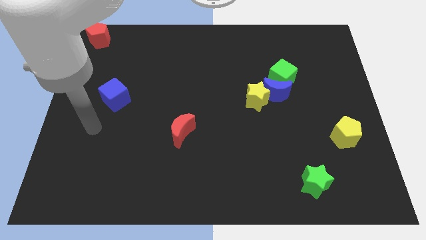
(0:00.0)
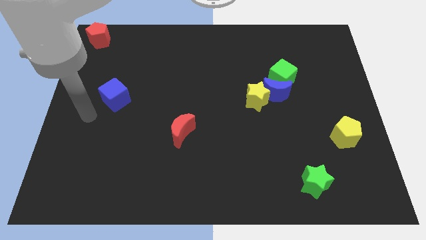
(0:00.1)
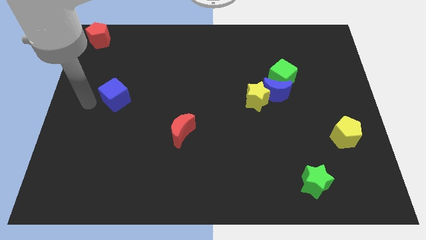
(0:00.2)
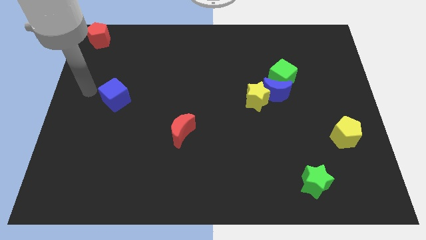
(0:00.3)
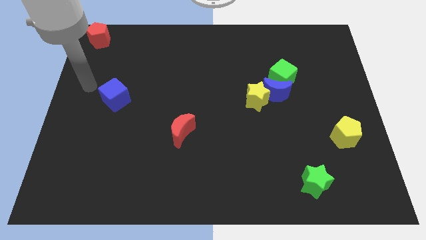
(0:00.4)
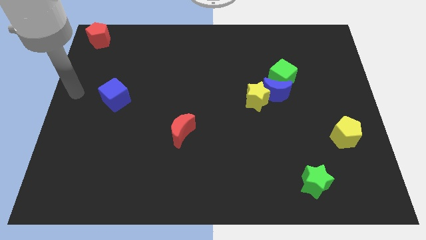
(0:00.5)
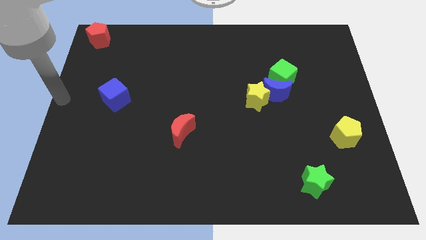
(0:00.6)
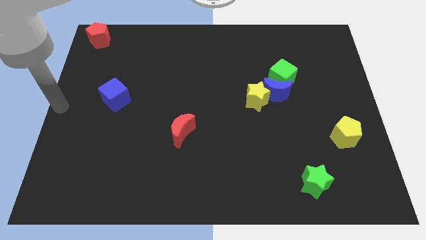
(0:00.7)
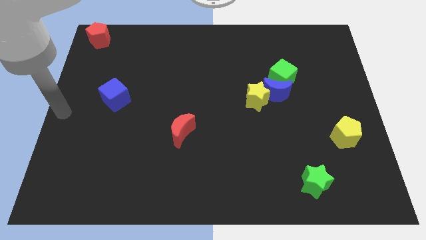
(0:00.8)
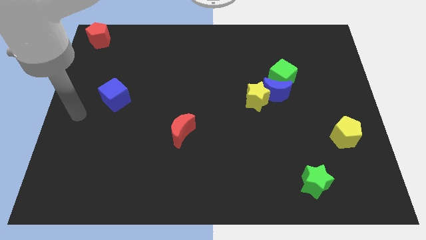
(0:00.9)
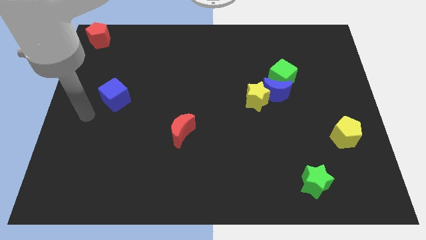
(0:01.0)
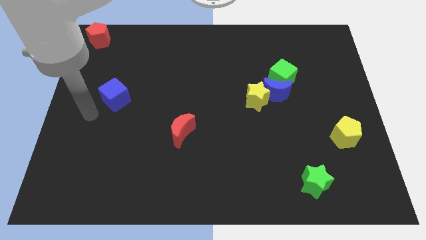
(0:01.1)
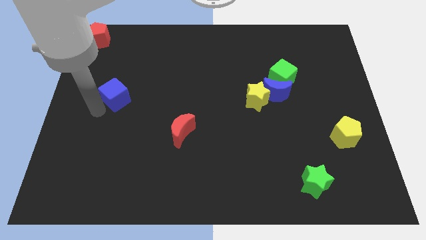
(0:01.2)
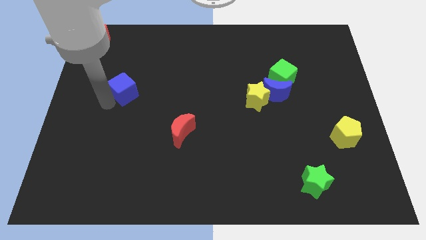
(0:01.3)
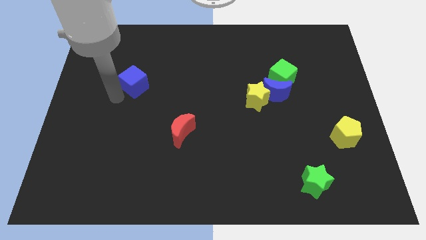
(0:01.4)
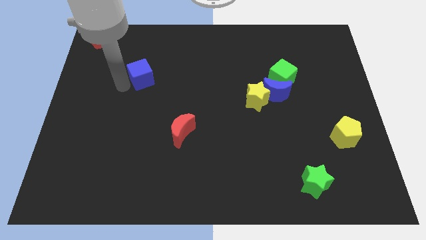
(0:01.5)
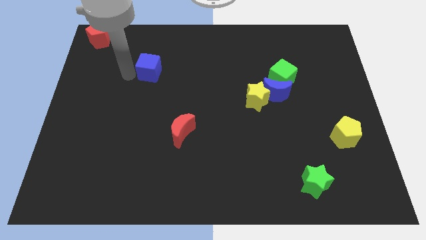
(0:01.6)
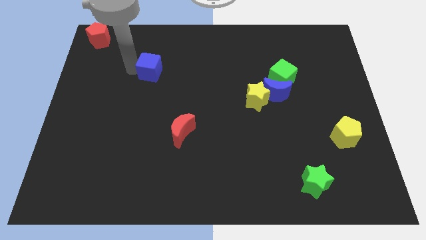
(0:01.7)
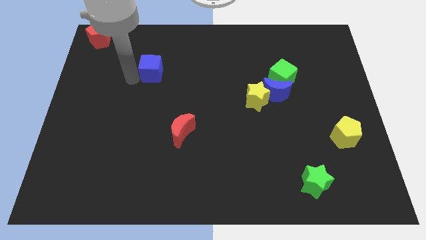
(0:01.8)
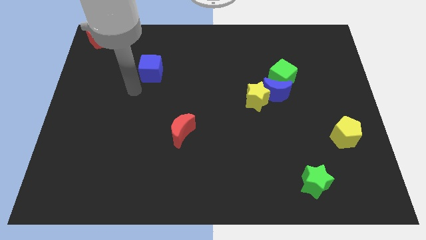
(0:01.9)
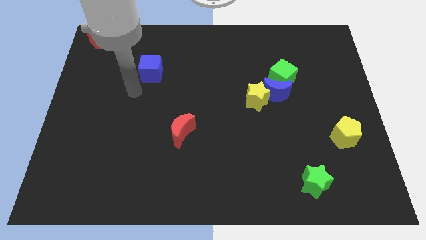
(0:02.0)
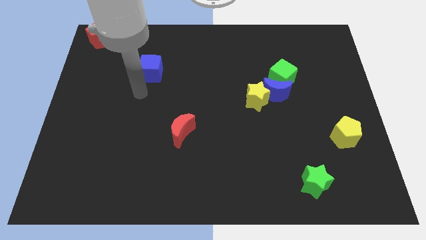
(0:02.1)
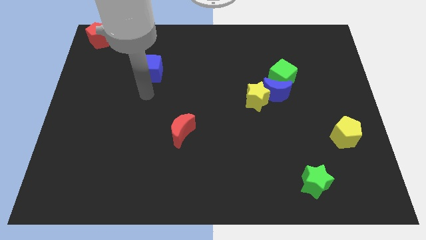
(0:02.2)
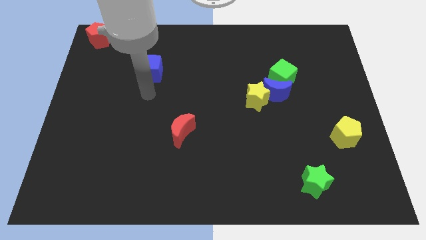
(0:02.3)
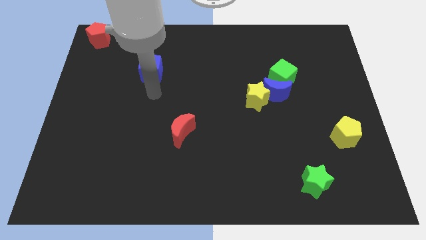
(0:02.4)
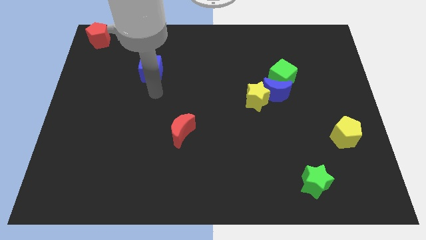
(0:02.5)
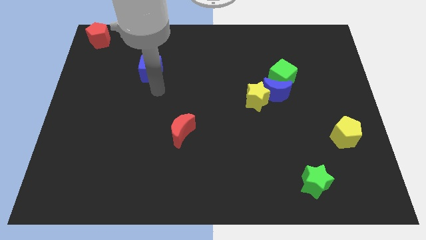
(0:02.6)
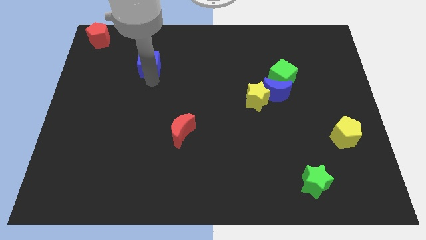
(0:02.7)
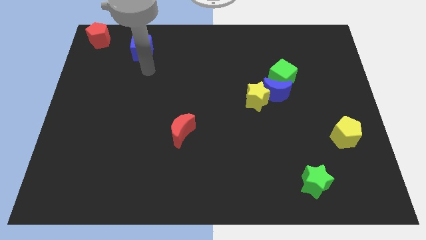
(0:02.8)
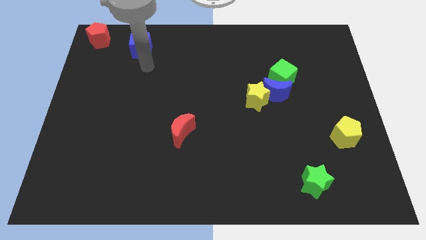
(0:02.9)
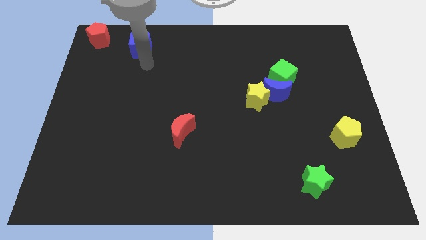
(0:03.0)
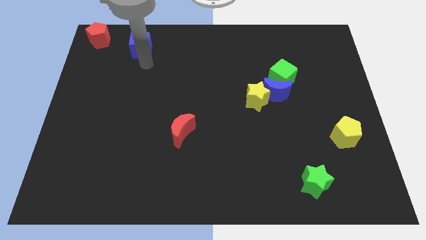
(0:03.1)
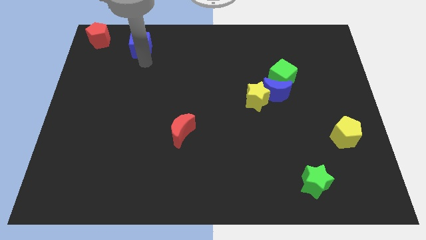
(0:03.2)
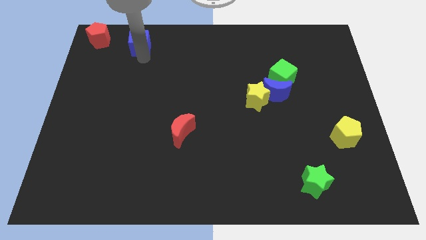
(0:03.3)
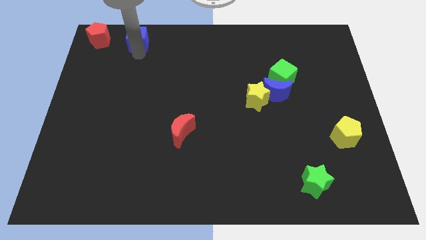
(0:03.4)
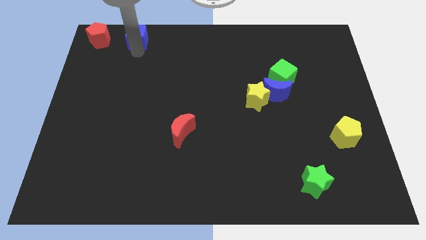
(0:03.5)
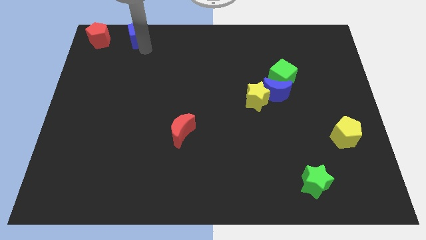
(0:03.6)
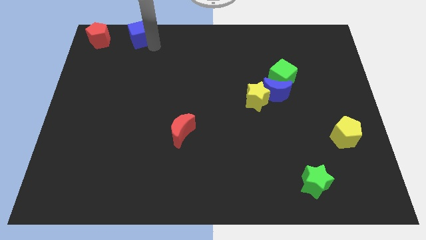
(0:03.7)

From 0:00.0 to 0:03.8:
push blue cube right to red pentagon

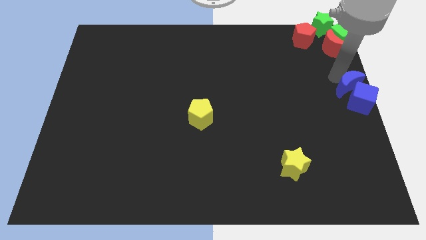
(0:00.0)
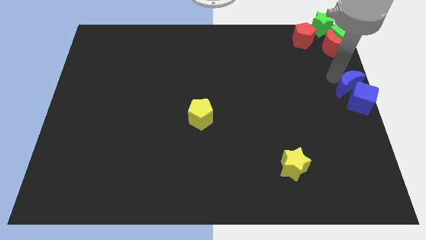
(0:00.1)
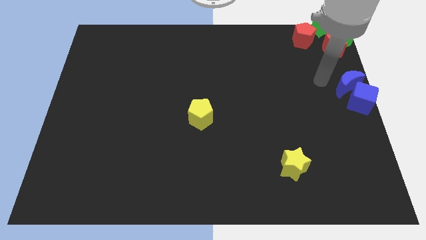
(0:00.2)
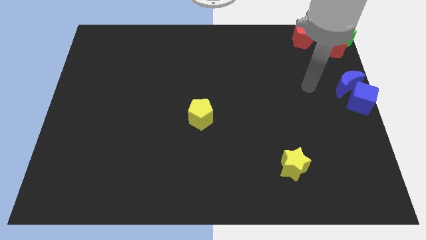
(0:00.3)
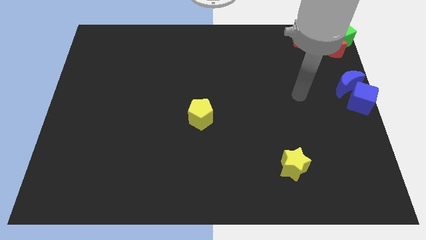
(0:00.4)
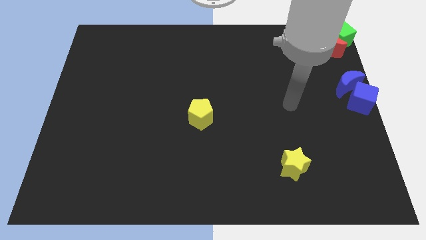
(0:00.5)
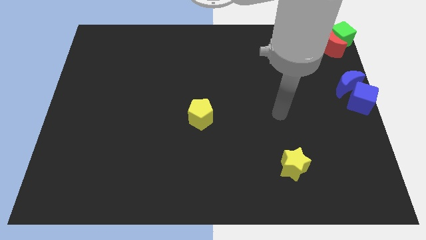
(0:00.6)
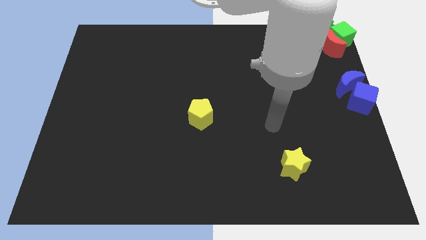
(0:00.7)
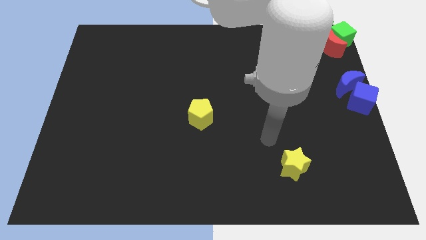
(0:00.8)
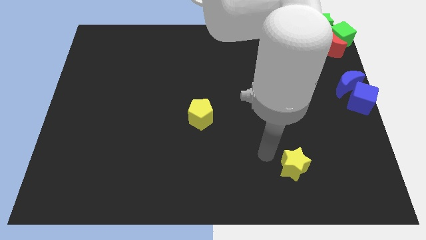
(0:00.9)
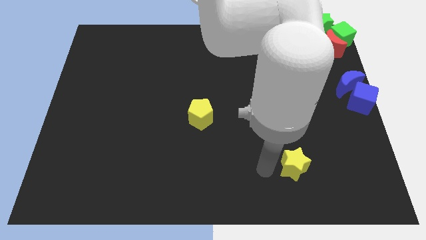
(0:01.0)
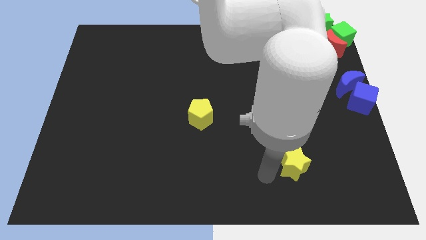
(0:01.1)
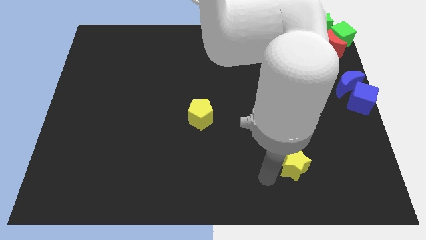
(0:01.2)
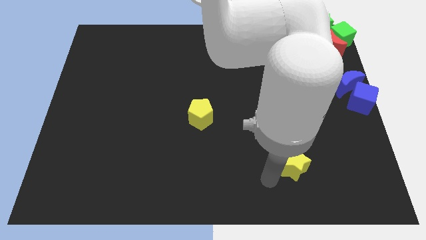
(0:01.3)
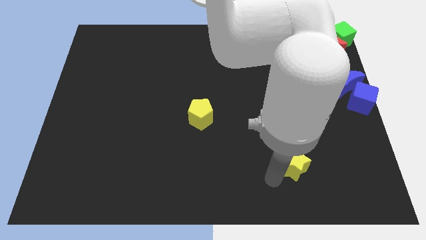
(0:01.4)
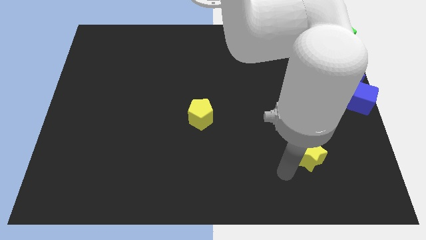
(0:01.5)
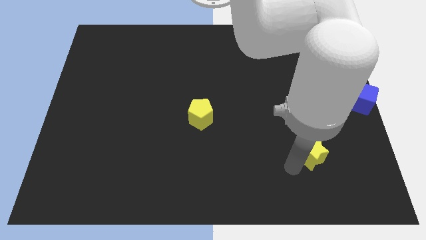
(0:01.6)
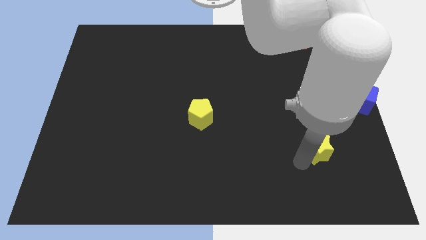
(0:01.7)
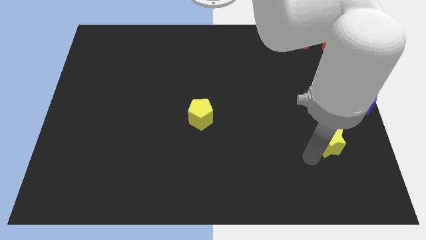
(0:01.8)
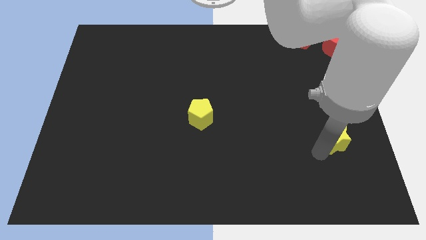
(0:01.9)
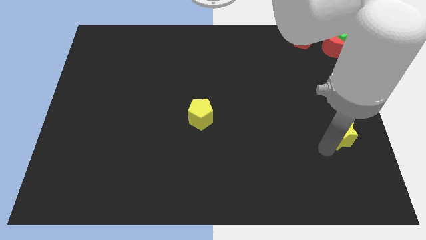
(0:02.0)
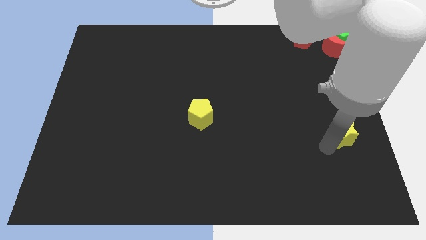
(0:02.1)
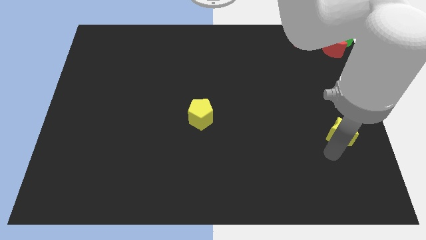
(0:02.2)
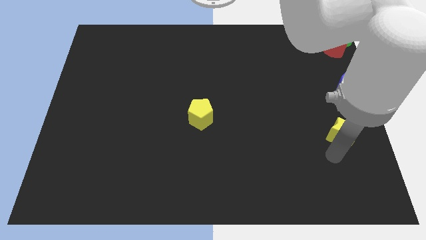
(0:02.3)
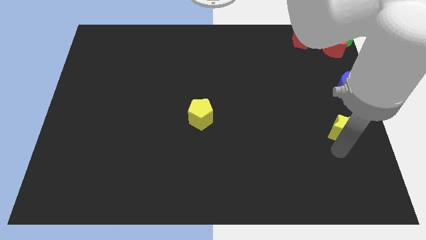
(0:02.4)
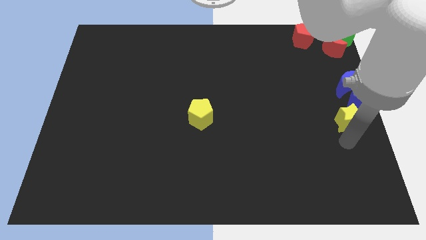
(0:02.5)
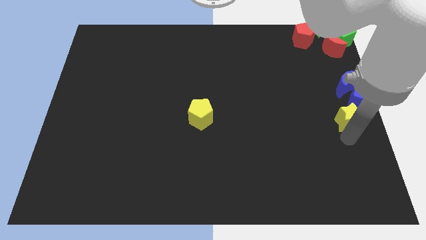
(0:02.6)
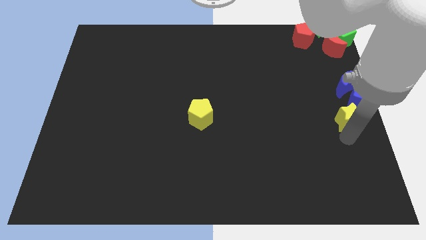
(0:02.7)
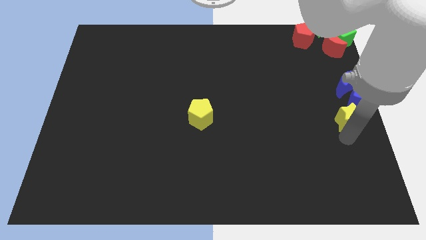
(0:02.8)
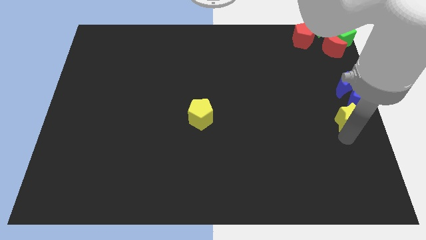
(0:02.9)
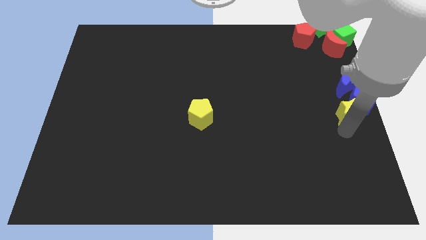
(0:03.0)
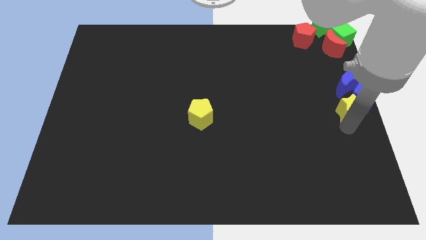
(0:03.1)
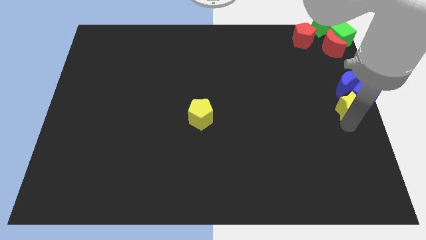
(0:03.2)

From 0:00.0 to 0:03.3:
move the yellow star into the bottom side of the blue cube

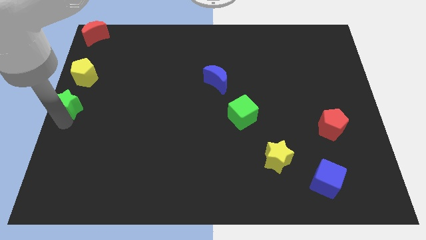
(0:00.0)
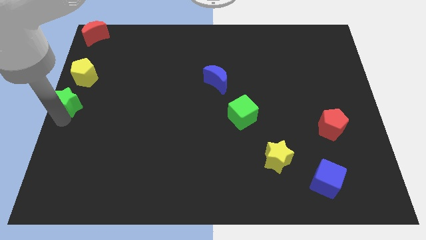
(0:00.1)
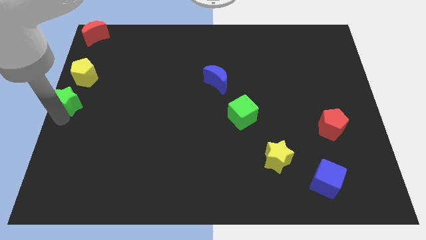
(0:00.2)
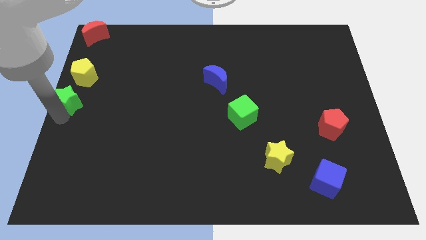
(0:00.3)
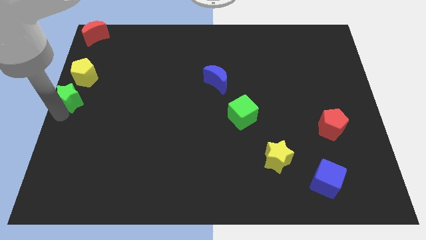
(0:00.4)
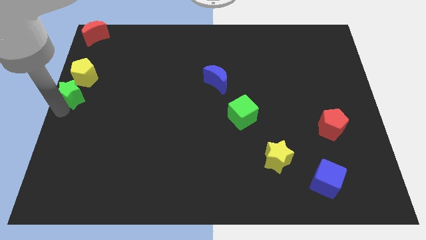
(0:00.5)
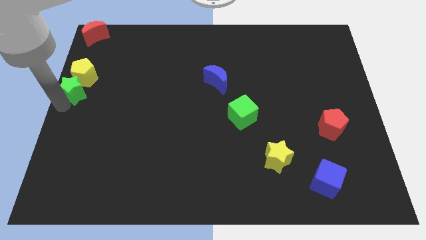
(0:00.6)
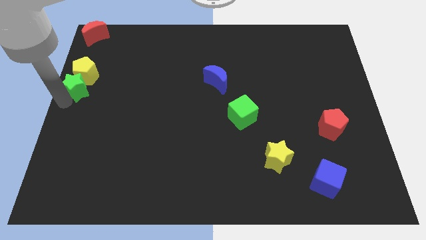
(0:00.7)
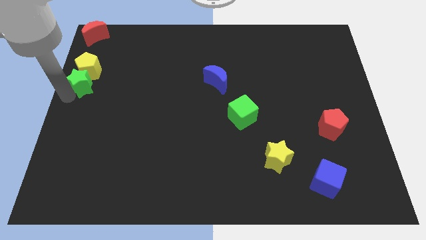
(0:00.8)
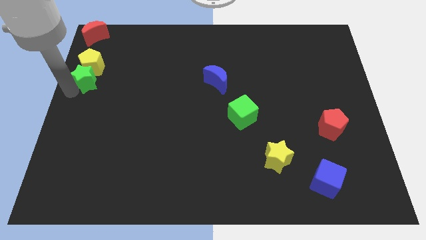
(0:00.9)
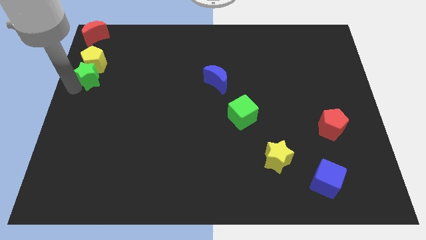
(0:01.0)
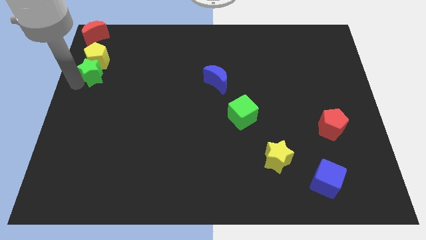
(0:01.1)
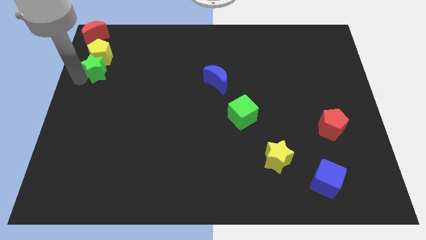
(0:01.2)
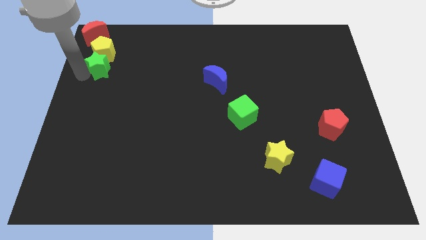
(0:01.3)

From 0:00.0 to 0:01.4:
push the green star into the yellow pentagon

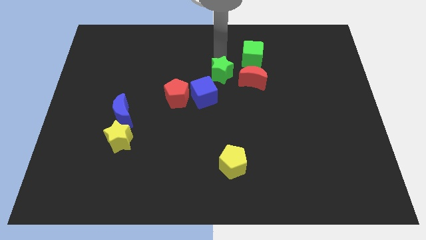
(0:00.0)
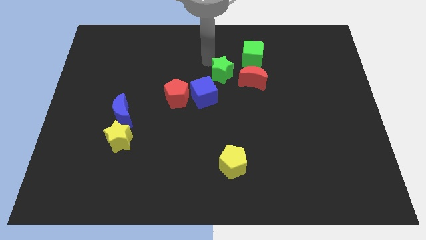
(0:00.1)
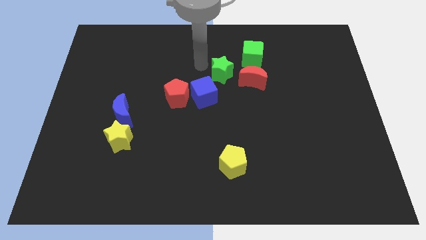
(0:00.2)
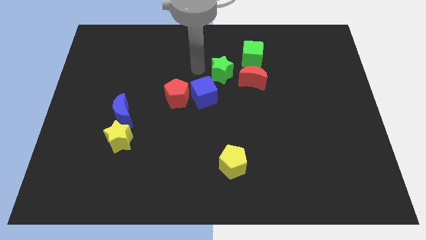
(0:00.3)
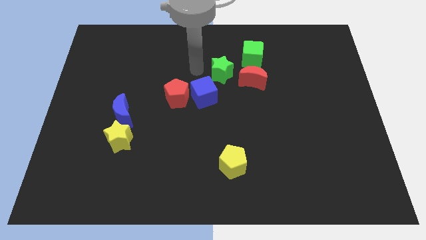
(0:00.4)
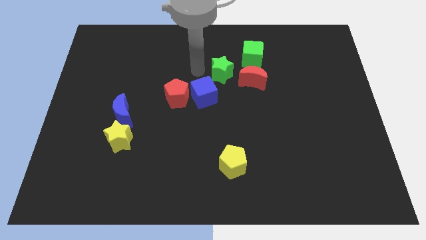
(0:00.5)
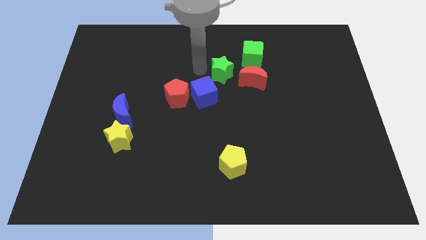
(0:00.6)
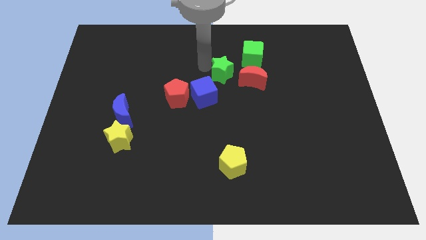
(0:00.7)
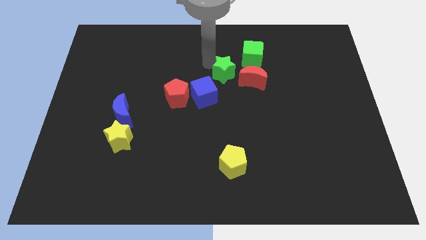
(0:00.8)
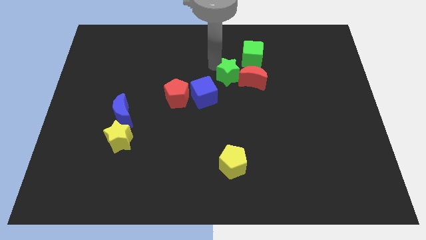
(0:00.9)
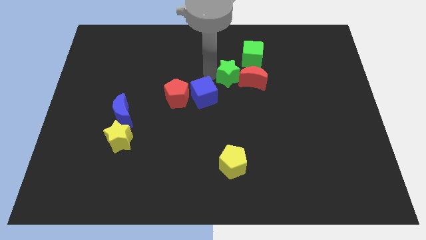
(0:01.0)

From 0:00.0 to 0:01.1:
slide the green star into the red crescent
